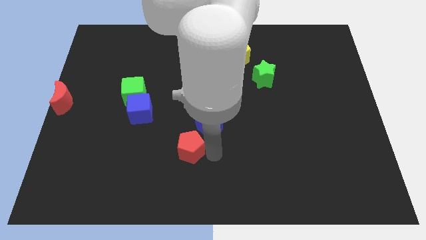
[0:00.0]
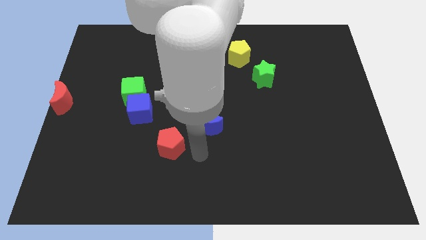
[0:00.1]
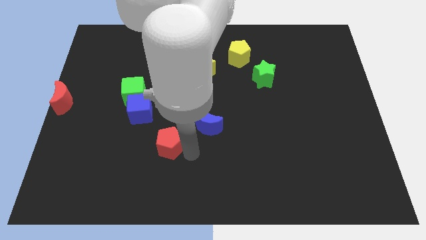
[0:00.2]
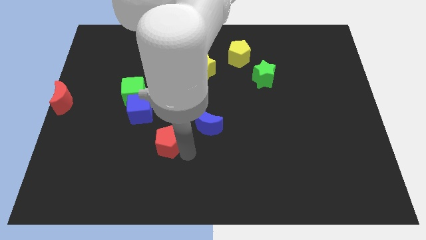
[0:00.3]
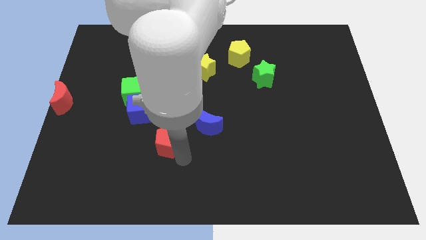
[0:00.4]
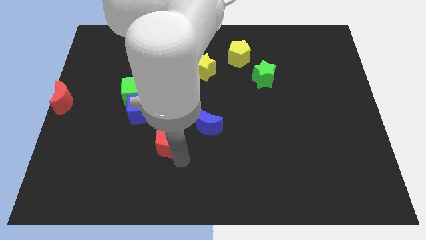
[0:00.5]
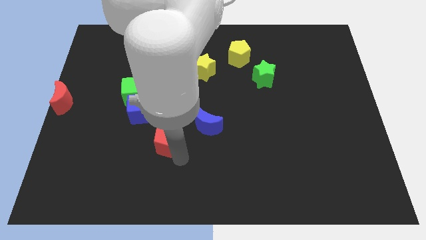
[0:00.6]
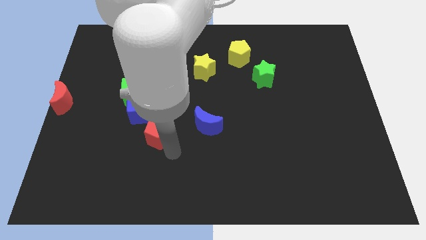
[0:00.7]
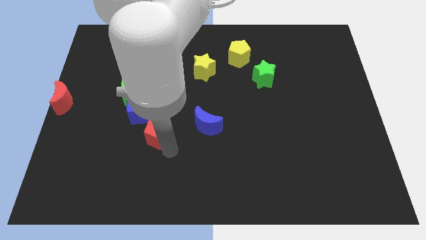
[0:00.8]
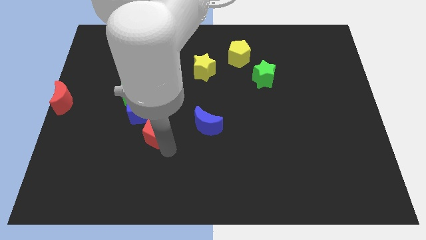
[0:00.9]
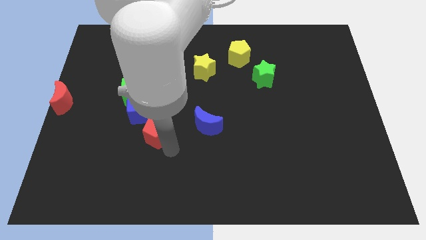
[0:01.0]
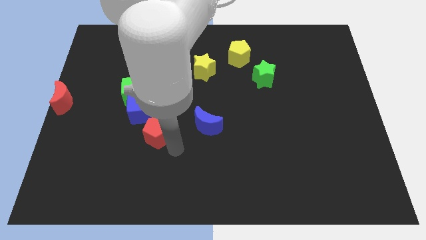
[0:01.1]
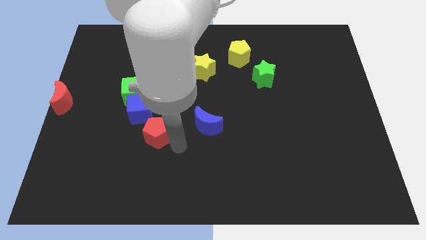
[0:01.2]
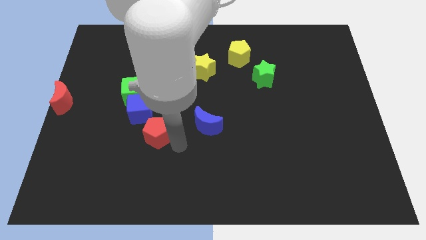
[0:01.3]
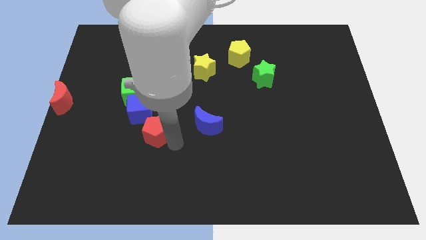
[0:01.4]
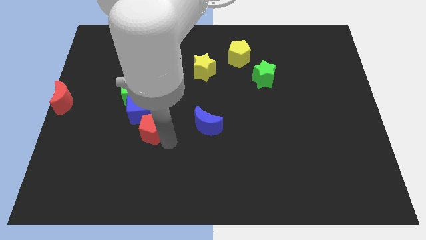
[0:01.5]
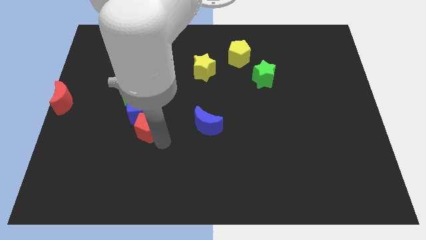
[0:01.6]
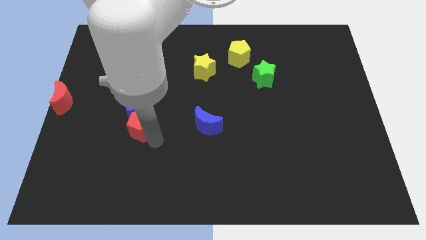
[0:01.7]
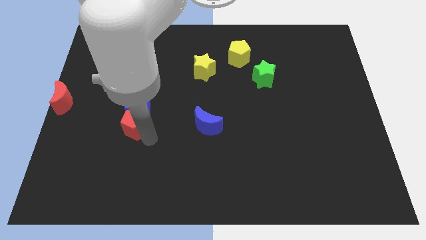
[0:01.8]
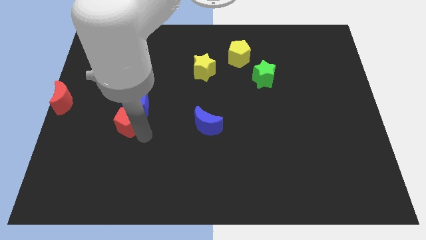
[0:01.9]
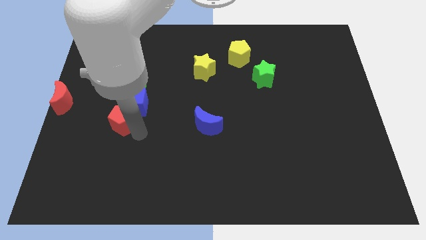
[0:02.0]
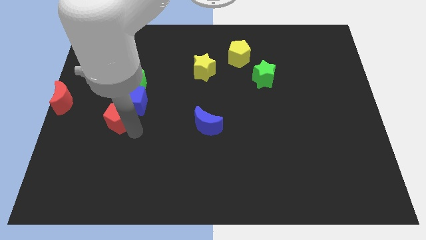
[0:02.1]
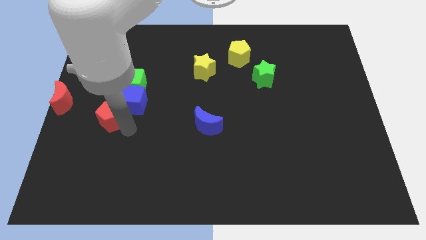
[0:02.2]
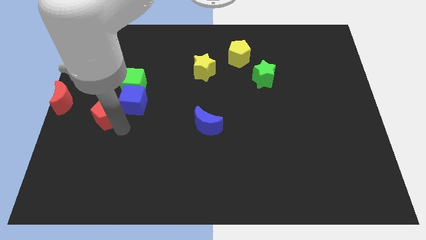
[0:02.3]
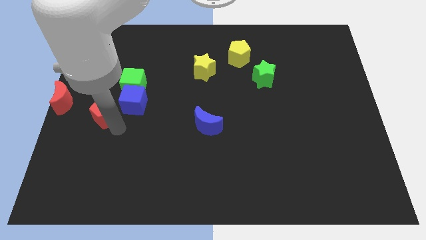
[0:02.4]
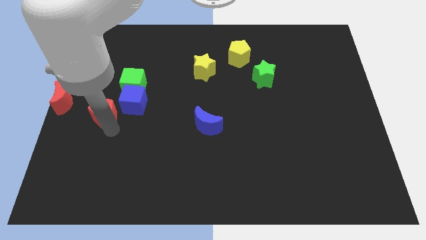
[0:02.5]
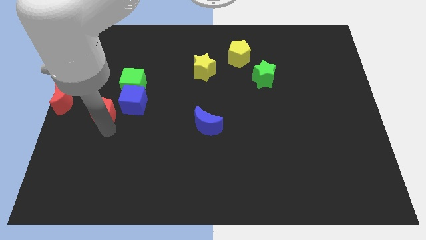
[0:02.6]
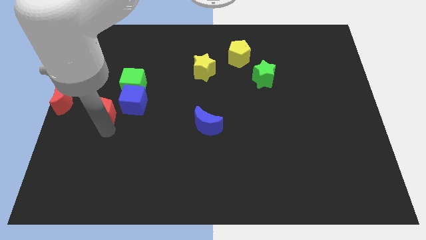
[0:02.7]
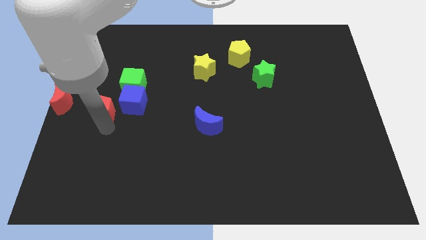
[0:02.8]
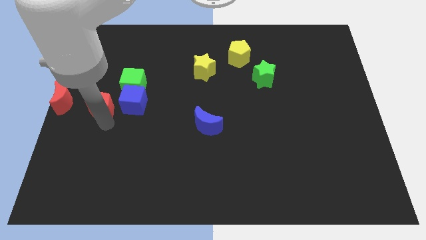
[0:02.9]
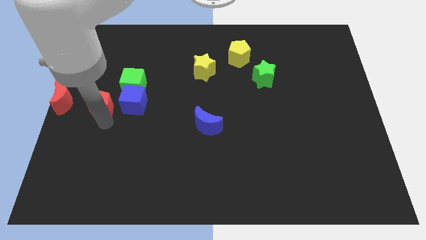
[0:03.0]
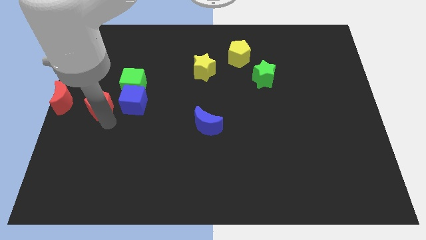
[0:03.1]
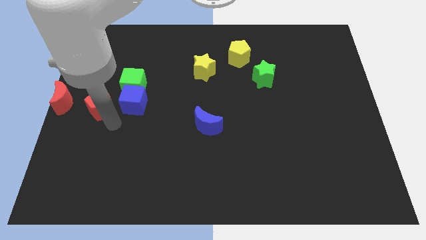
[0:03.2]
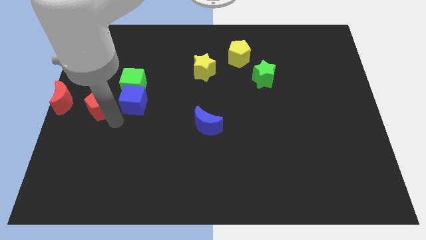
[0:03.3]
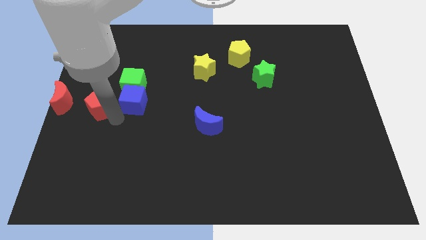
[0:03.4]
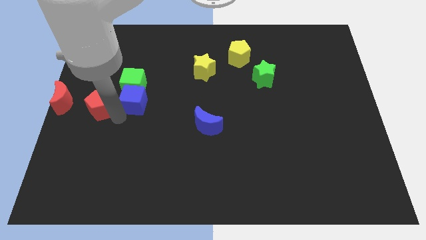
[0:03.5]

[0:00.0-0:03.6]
place the red pentagon to the left of the blue cube

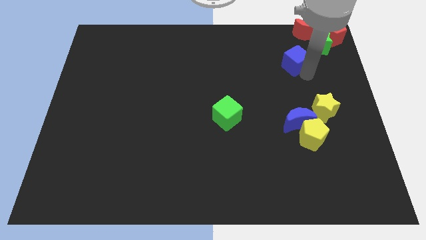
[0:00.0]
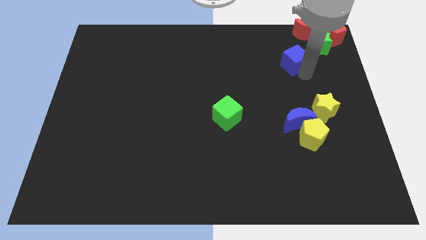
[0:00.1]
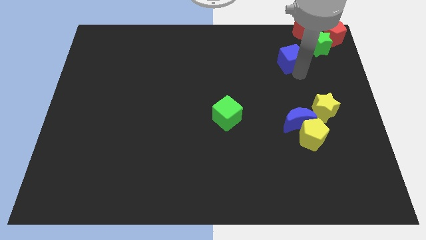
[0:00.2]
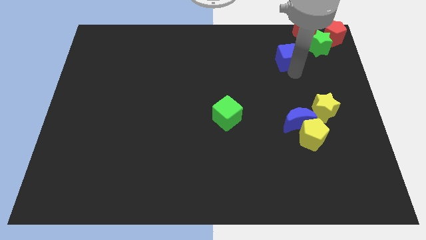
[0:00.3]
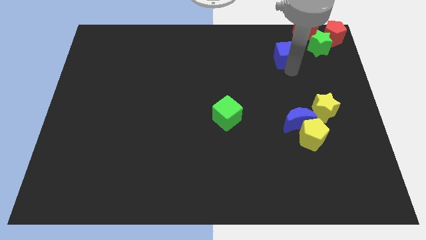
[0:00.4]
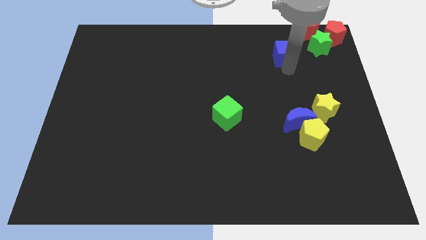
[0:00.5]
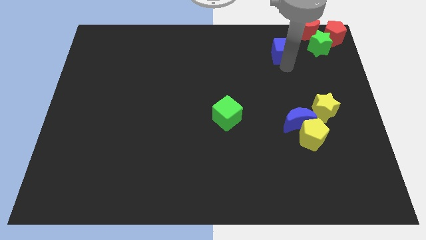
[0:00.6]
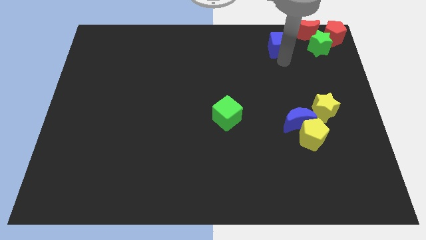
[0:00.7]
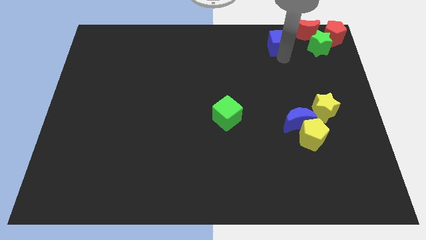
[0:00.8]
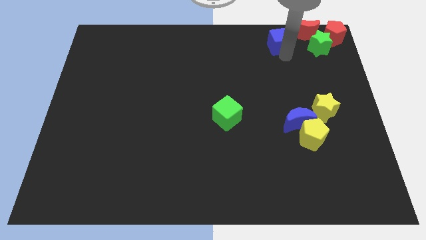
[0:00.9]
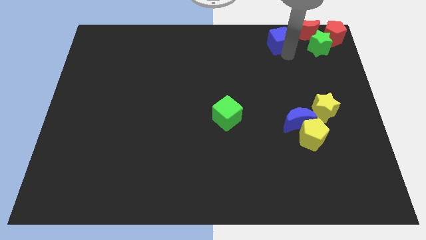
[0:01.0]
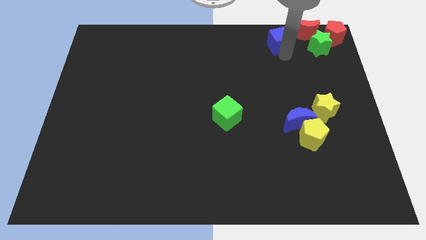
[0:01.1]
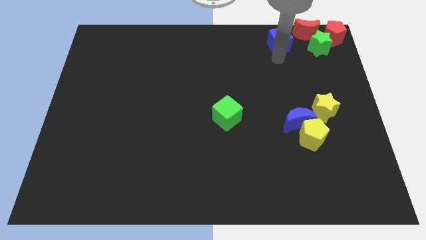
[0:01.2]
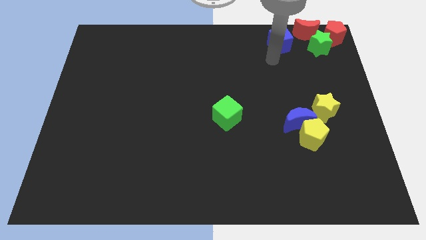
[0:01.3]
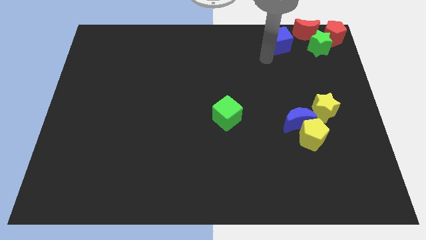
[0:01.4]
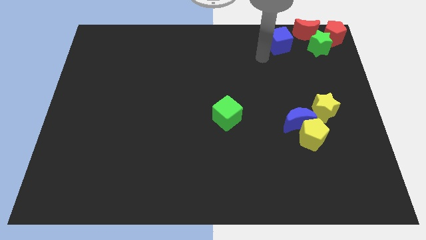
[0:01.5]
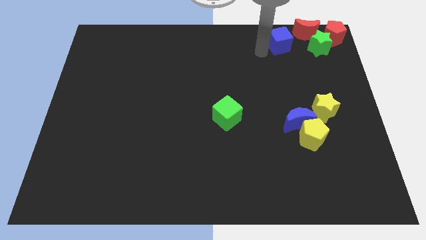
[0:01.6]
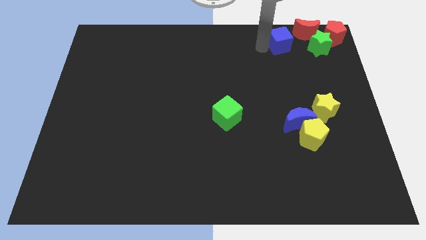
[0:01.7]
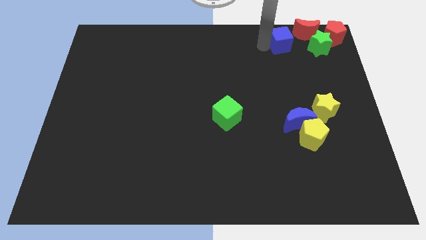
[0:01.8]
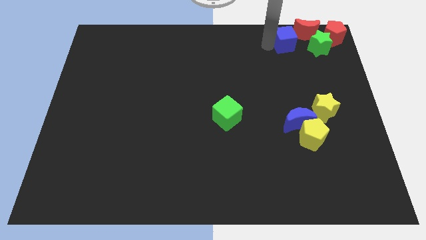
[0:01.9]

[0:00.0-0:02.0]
move the blue cube left to the green star

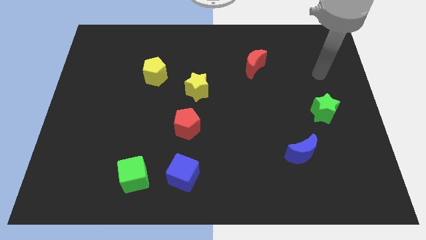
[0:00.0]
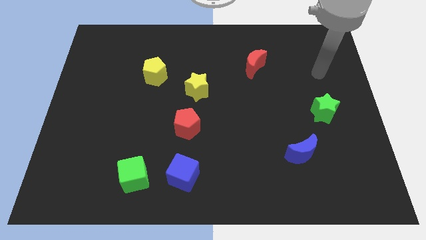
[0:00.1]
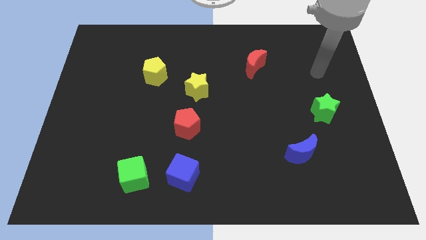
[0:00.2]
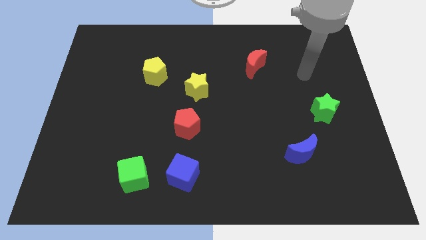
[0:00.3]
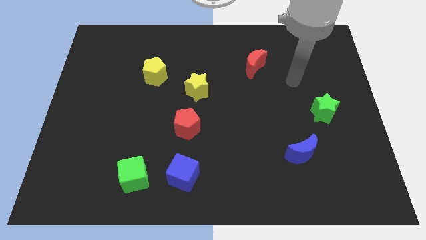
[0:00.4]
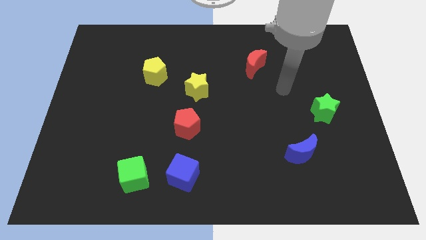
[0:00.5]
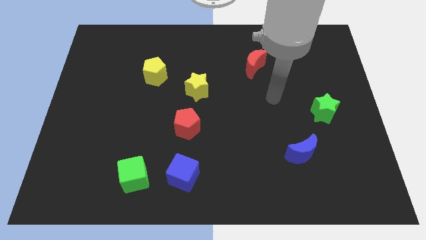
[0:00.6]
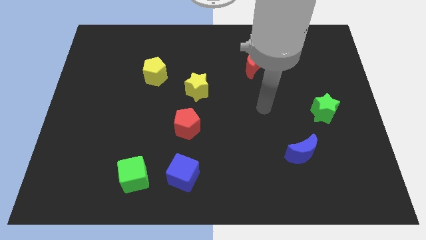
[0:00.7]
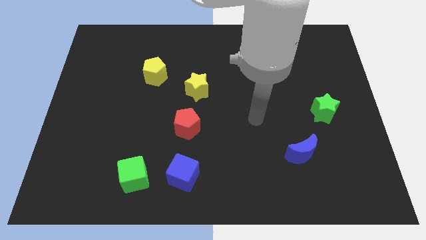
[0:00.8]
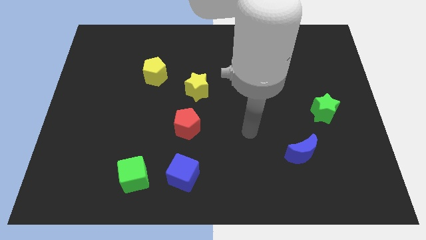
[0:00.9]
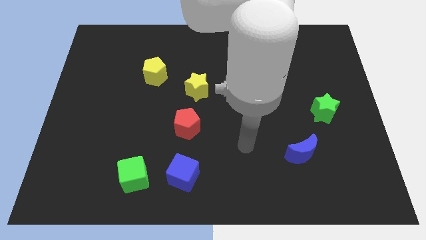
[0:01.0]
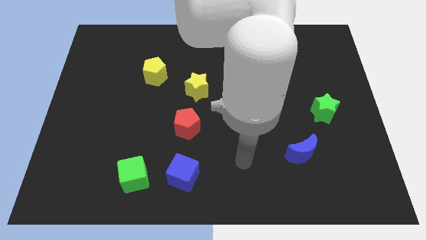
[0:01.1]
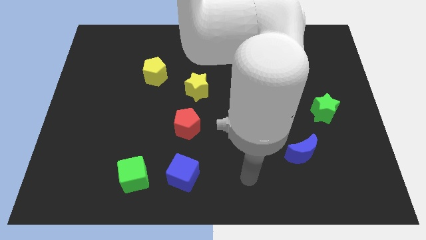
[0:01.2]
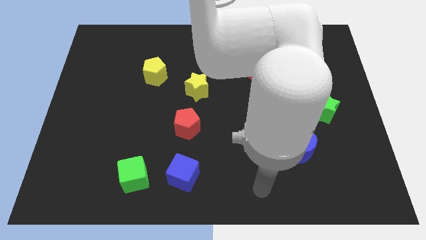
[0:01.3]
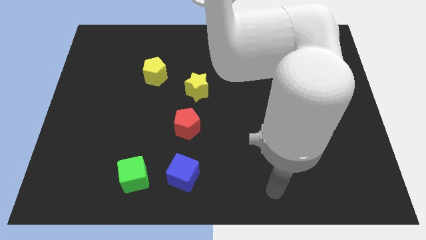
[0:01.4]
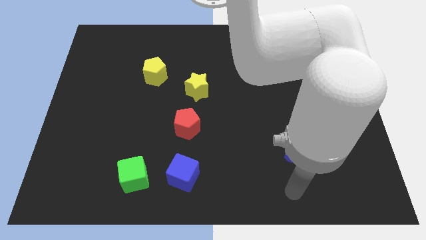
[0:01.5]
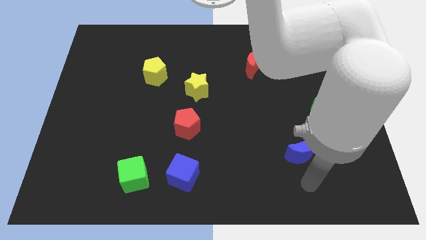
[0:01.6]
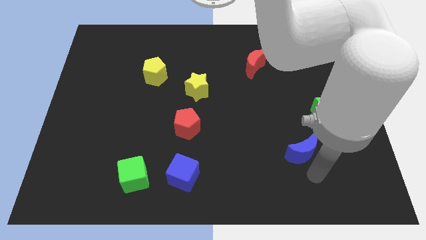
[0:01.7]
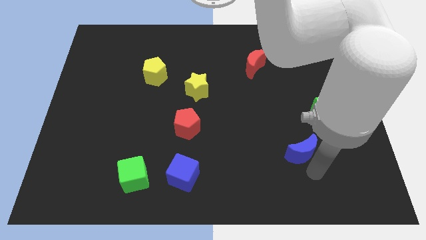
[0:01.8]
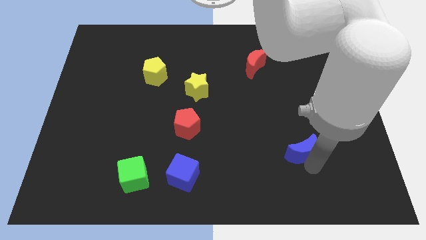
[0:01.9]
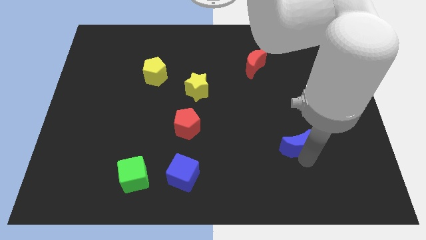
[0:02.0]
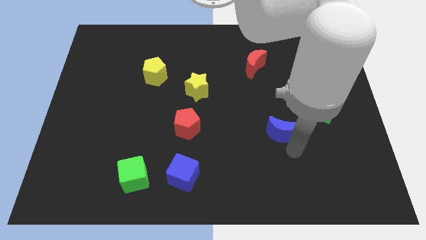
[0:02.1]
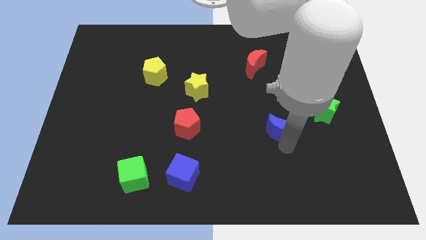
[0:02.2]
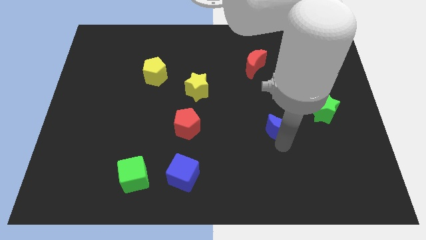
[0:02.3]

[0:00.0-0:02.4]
move the blue moon slightly up

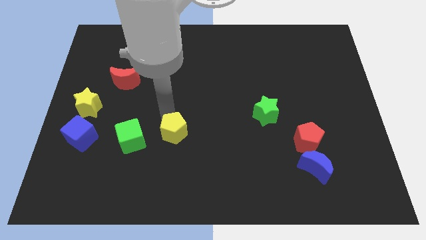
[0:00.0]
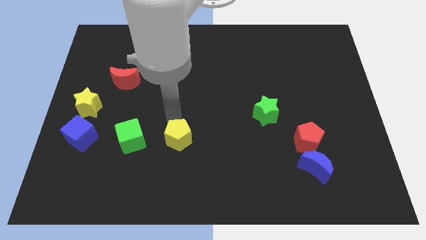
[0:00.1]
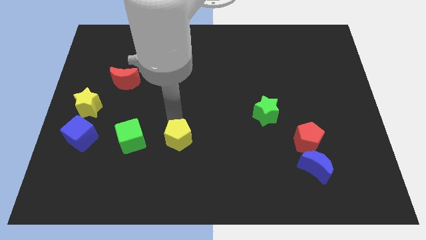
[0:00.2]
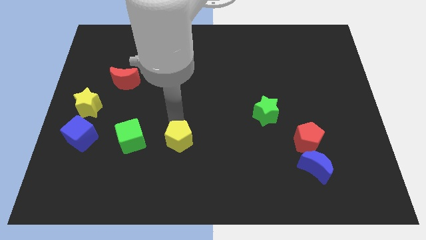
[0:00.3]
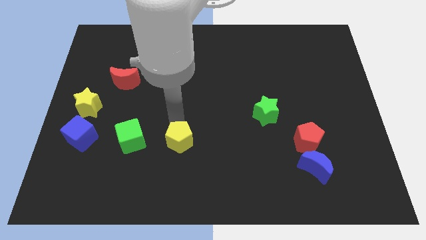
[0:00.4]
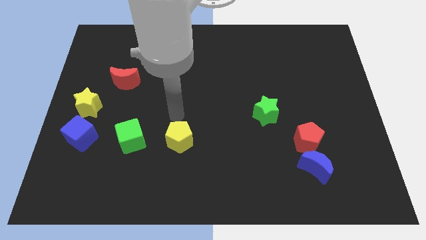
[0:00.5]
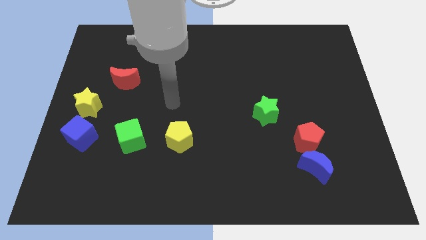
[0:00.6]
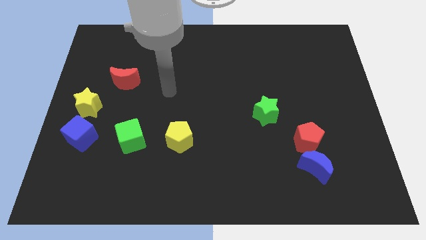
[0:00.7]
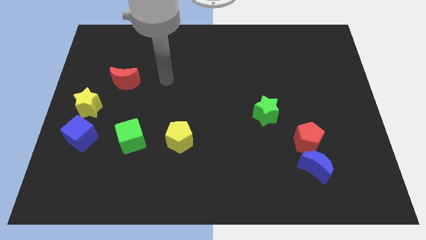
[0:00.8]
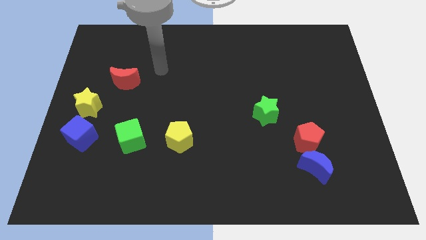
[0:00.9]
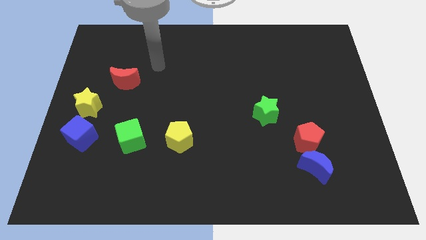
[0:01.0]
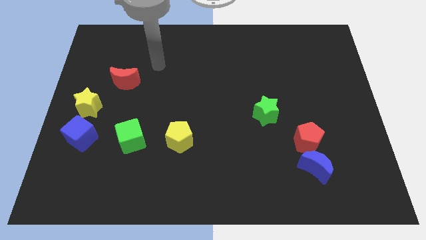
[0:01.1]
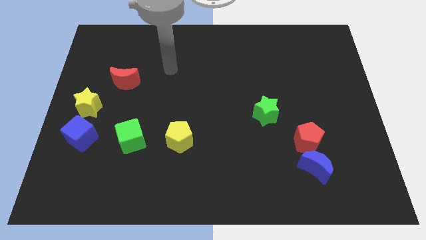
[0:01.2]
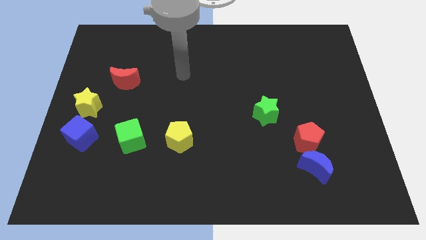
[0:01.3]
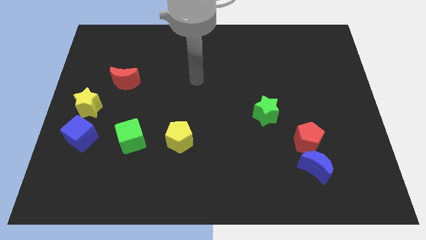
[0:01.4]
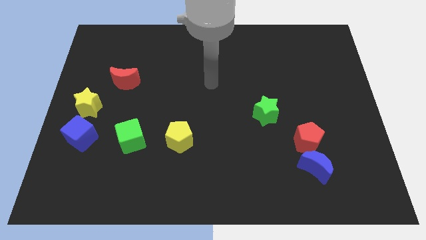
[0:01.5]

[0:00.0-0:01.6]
slightly push the yellow pentagon to the bottom of the board
